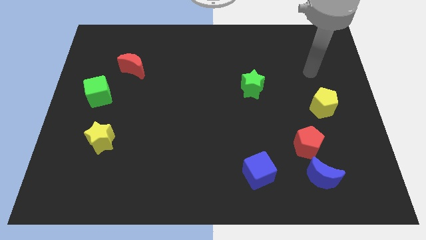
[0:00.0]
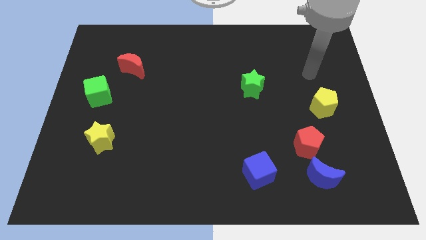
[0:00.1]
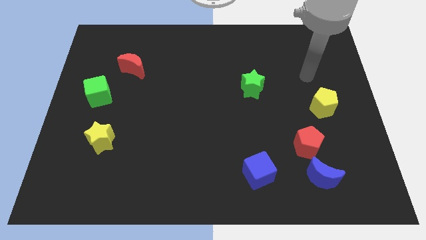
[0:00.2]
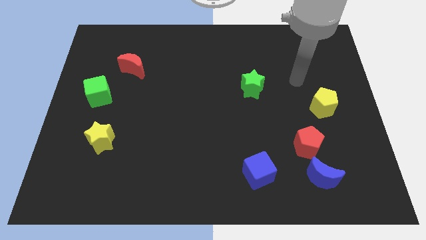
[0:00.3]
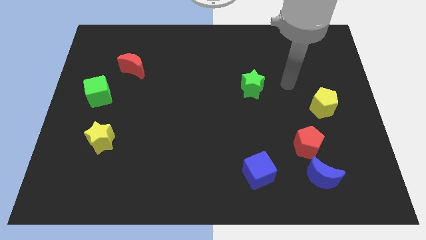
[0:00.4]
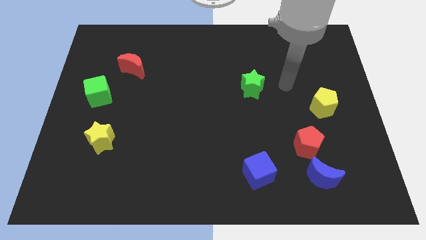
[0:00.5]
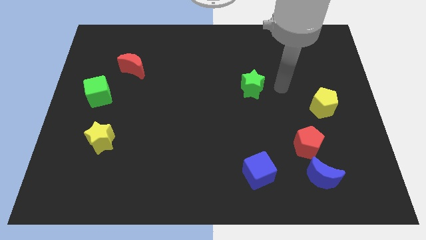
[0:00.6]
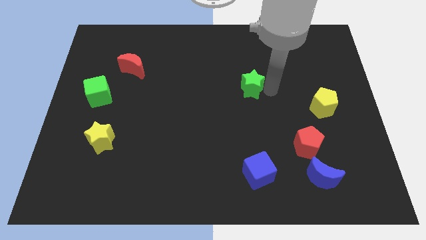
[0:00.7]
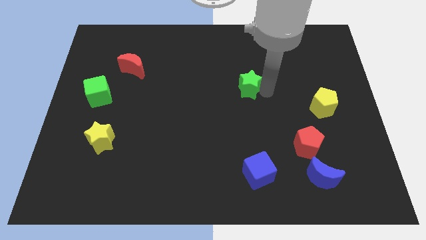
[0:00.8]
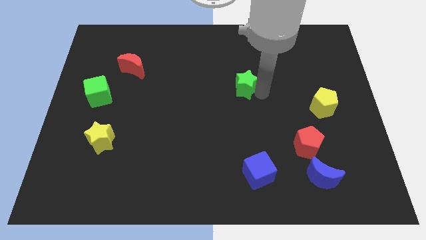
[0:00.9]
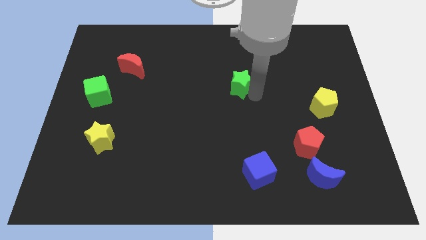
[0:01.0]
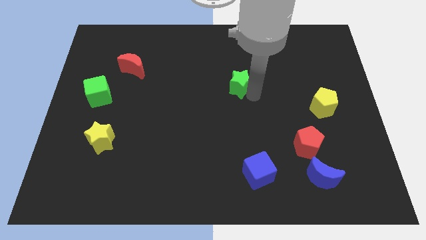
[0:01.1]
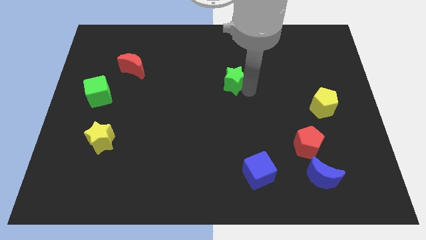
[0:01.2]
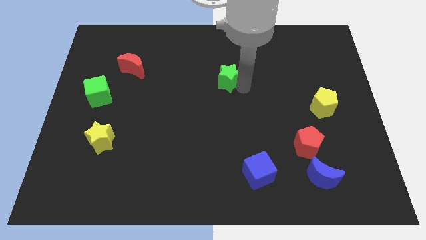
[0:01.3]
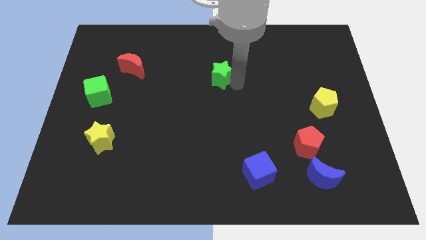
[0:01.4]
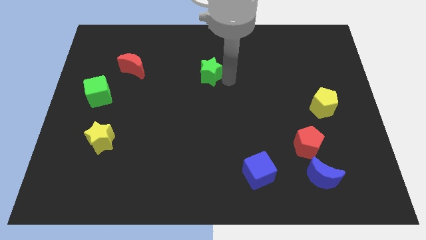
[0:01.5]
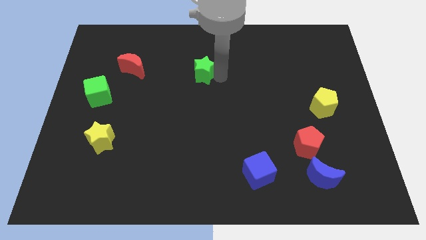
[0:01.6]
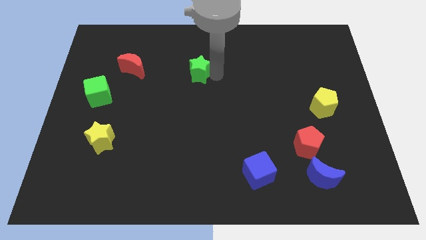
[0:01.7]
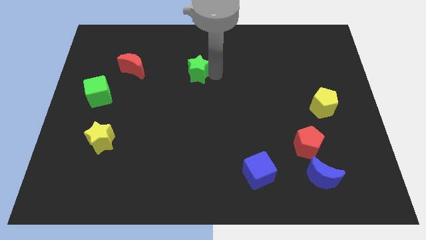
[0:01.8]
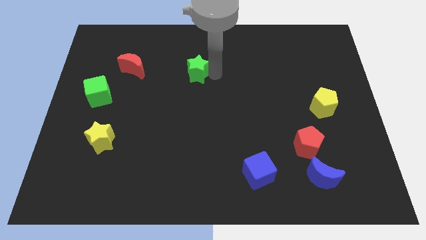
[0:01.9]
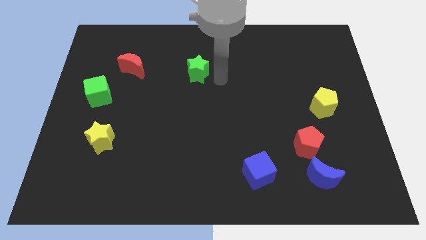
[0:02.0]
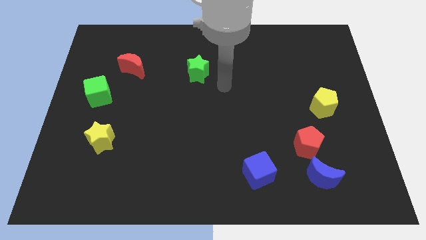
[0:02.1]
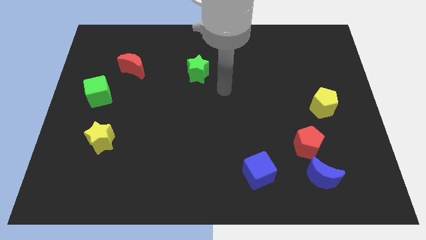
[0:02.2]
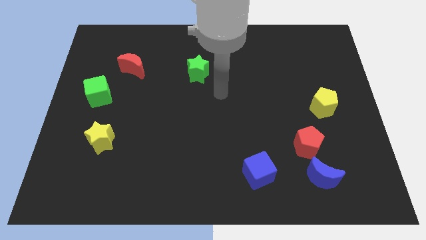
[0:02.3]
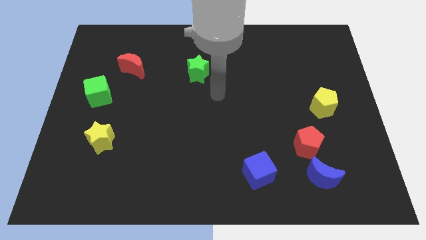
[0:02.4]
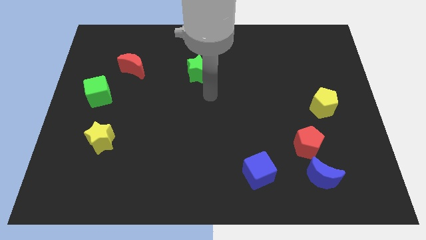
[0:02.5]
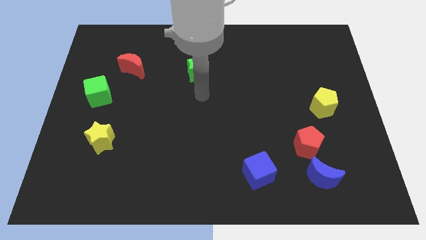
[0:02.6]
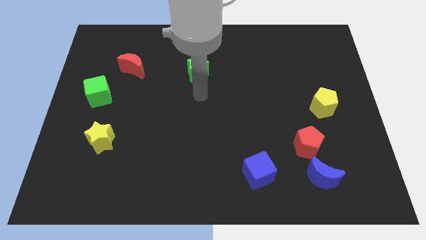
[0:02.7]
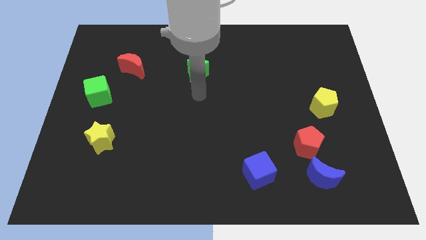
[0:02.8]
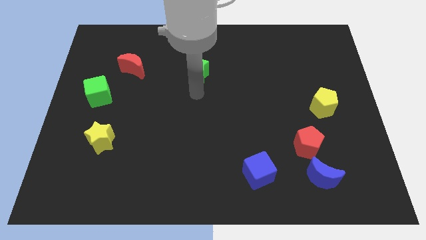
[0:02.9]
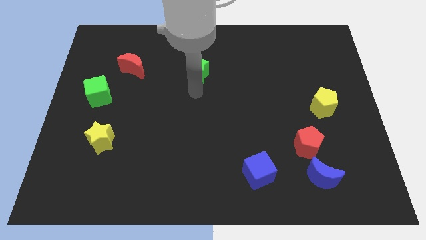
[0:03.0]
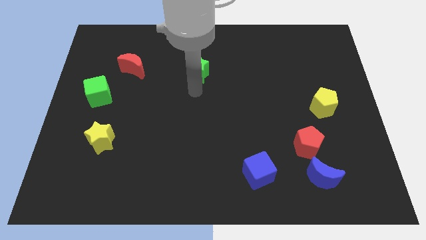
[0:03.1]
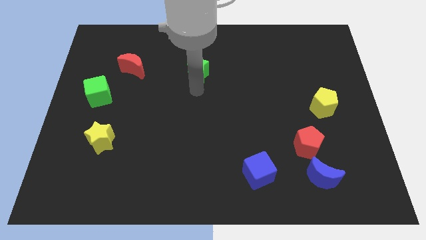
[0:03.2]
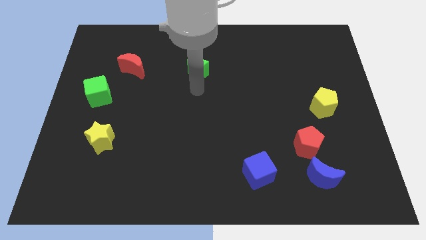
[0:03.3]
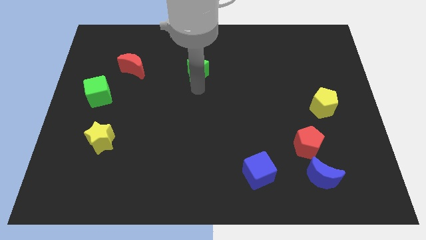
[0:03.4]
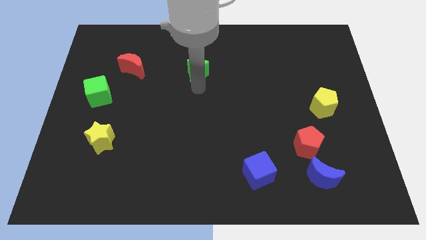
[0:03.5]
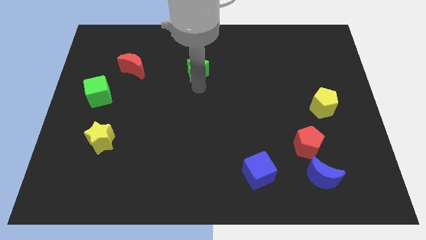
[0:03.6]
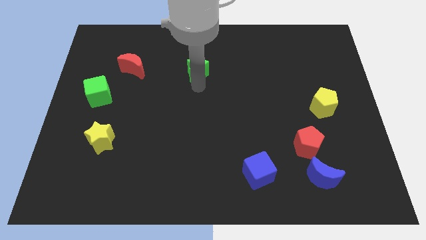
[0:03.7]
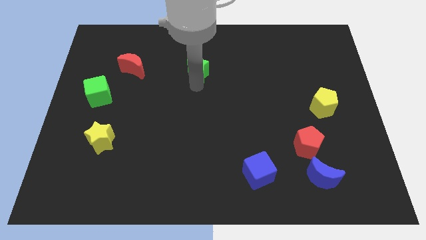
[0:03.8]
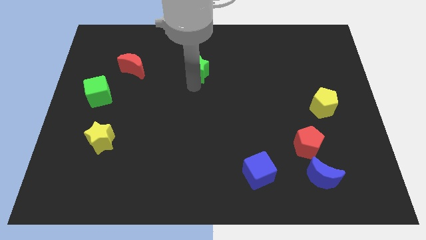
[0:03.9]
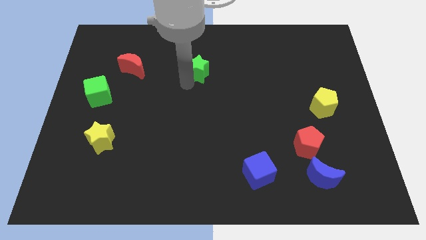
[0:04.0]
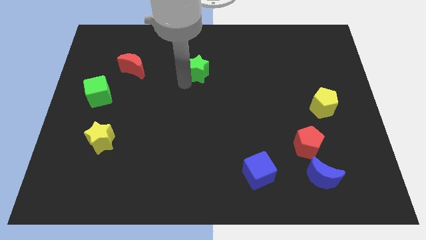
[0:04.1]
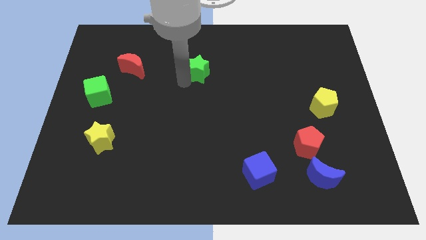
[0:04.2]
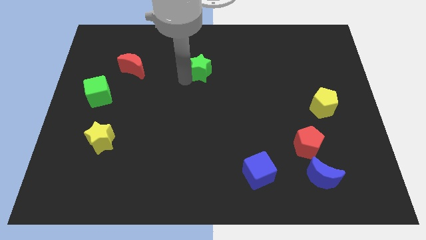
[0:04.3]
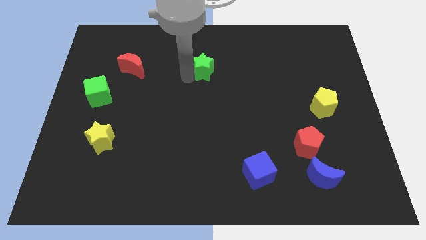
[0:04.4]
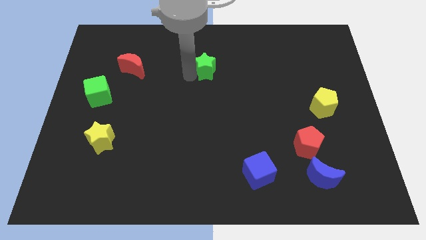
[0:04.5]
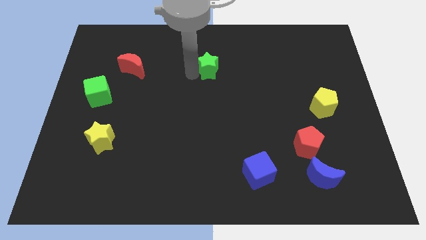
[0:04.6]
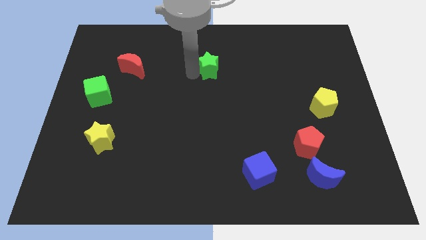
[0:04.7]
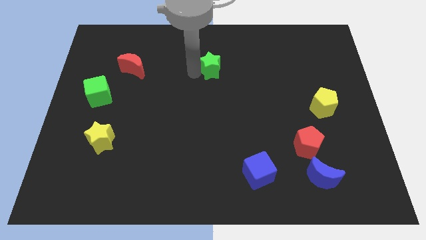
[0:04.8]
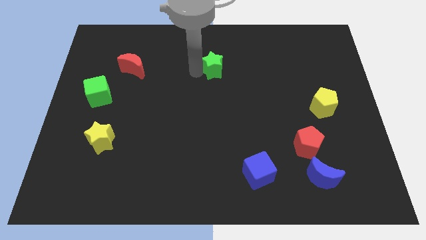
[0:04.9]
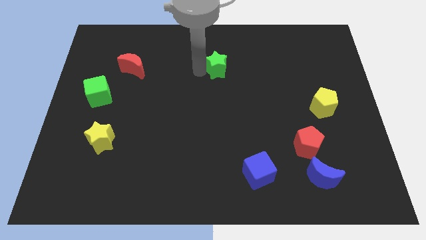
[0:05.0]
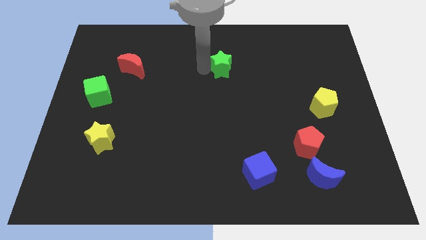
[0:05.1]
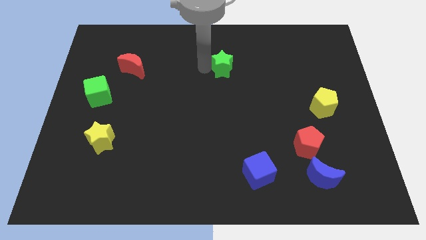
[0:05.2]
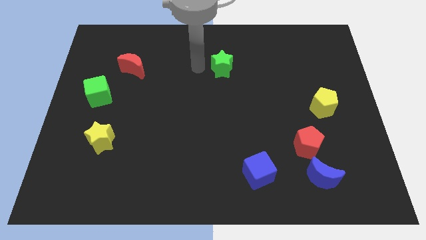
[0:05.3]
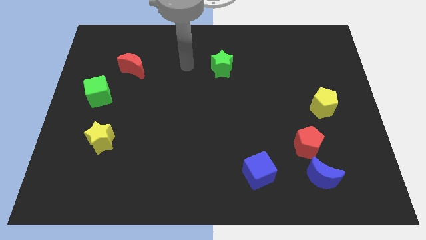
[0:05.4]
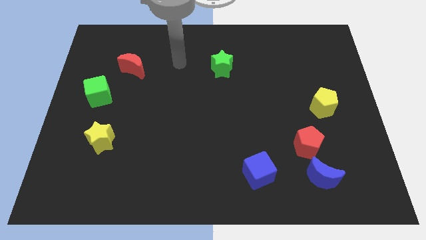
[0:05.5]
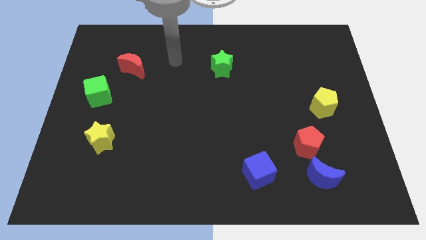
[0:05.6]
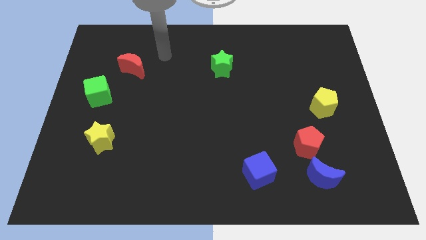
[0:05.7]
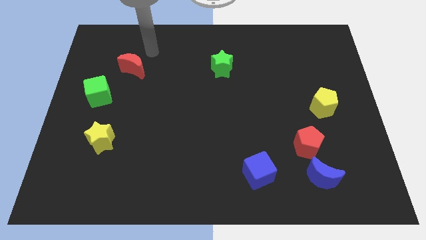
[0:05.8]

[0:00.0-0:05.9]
slide the green star to the top center of the board

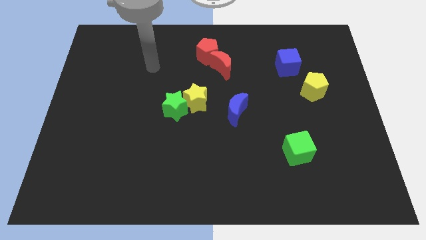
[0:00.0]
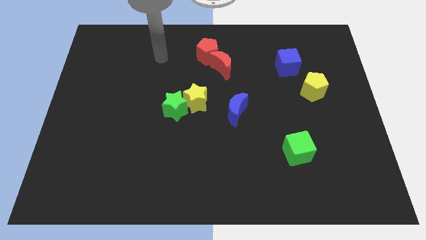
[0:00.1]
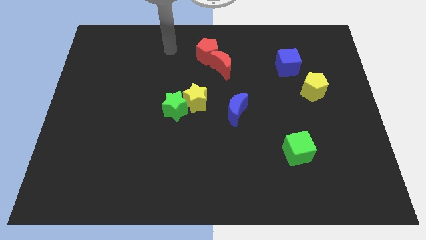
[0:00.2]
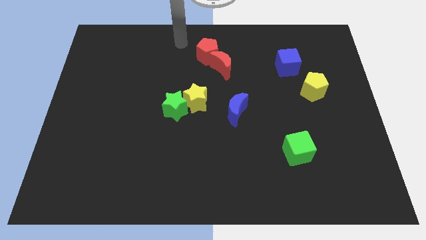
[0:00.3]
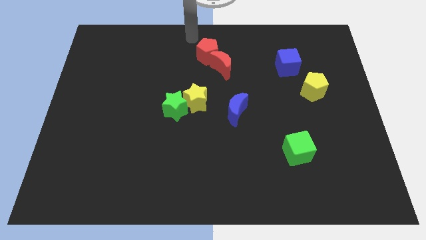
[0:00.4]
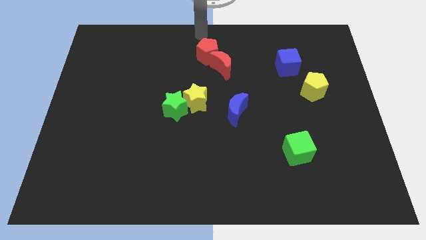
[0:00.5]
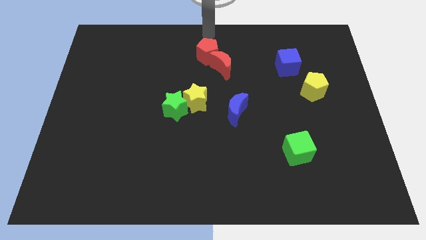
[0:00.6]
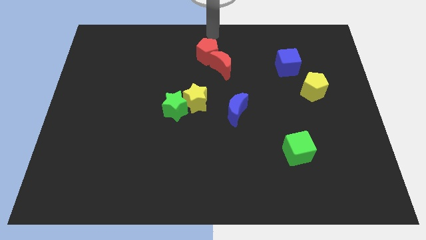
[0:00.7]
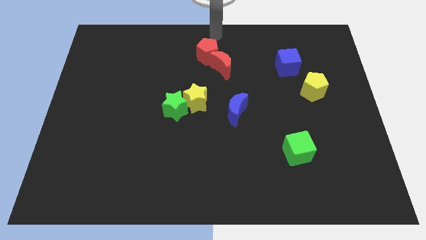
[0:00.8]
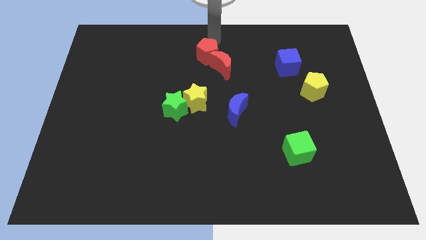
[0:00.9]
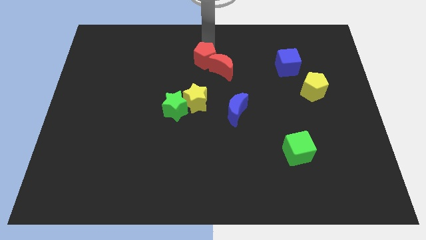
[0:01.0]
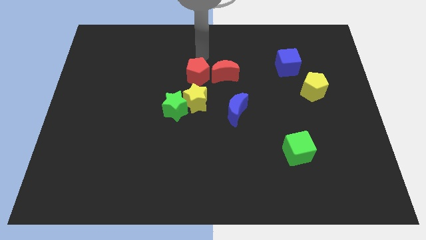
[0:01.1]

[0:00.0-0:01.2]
separate the red pentagon from the red crescent

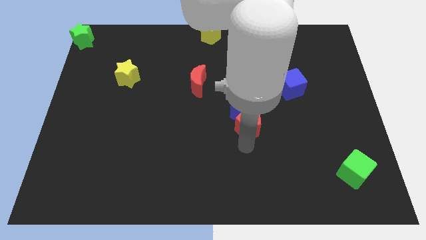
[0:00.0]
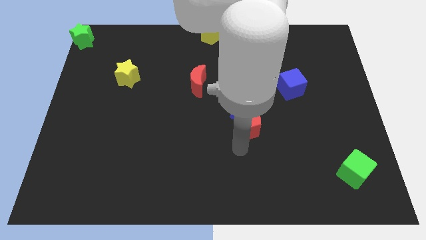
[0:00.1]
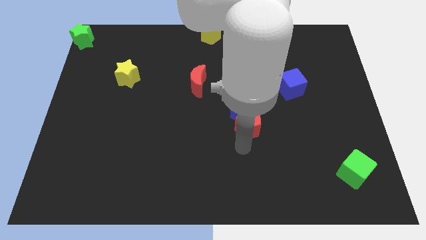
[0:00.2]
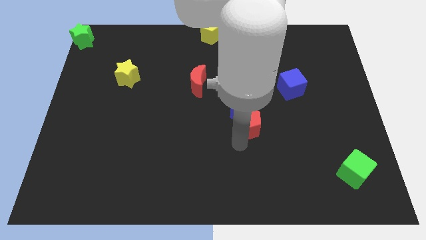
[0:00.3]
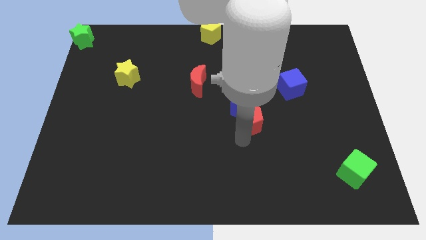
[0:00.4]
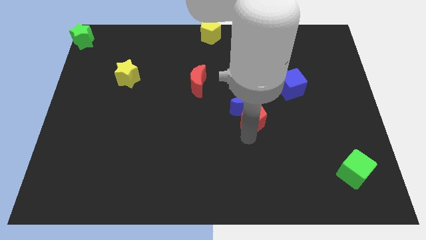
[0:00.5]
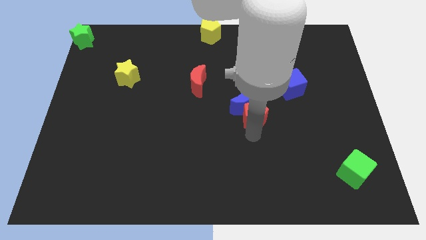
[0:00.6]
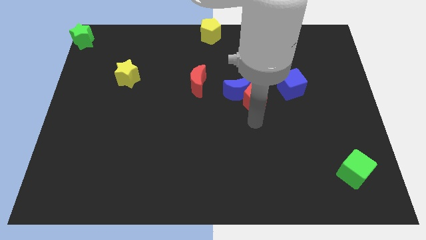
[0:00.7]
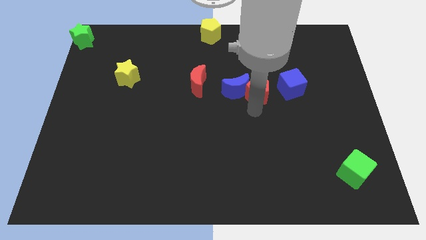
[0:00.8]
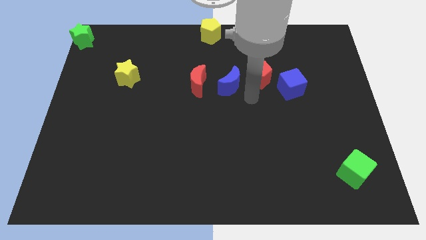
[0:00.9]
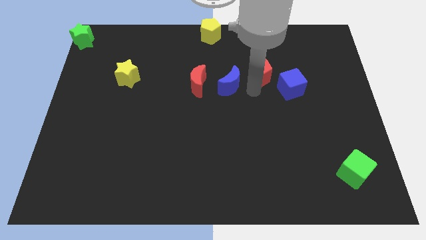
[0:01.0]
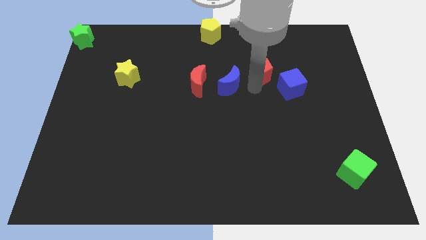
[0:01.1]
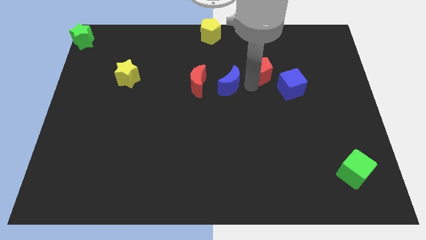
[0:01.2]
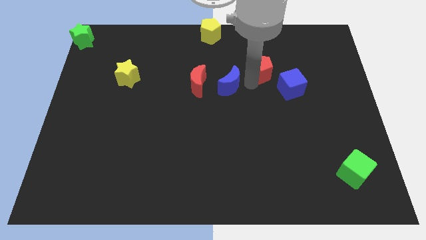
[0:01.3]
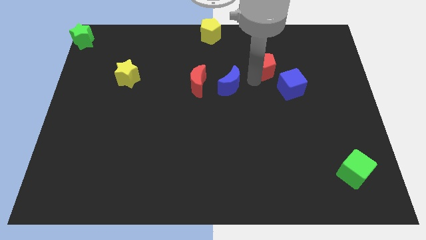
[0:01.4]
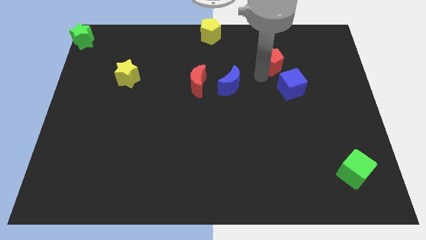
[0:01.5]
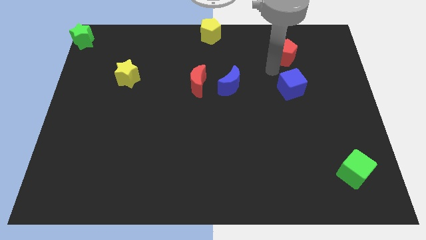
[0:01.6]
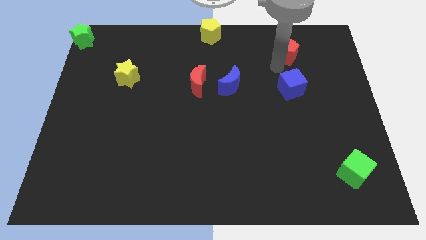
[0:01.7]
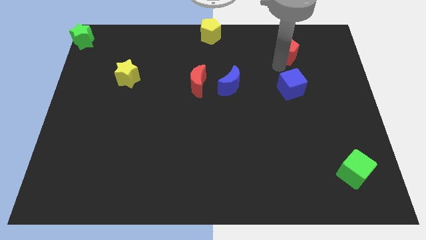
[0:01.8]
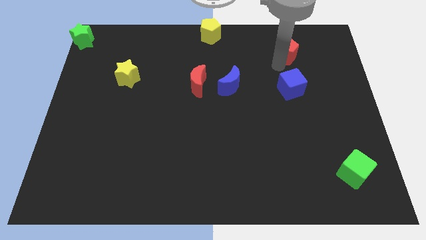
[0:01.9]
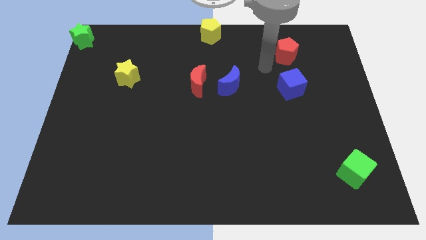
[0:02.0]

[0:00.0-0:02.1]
place red pentagon on top of blue cube
